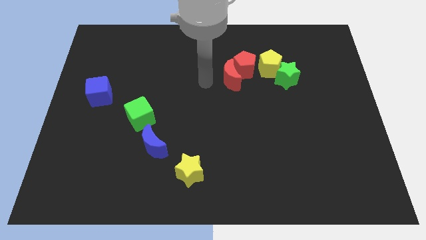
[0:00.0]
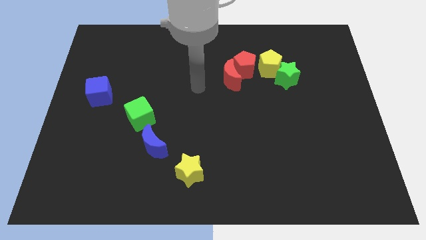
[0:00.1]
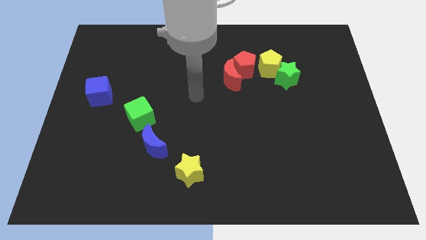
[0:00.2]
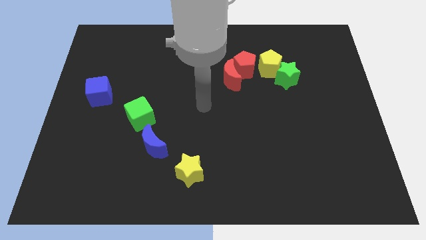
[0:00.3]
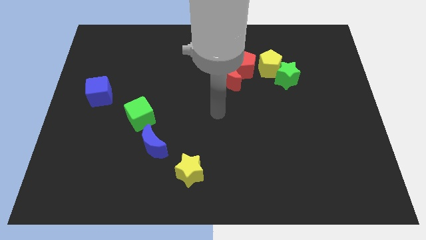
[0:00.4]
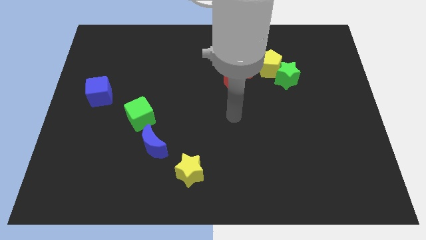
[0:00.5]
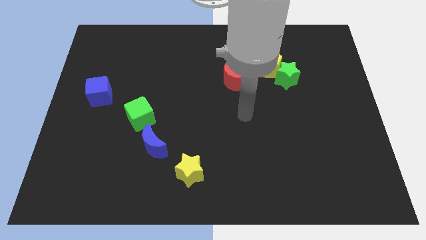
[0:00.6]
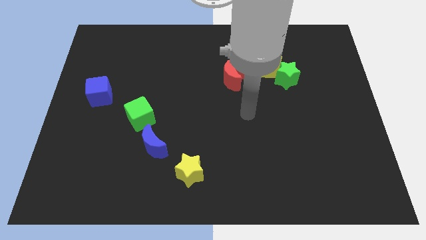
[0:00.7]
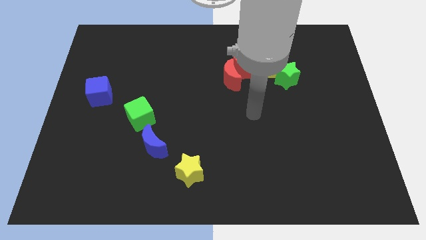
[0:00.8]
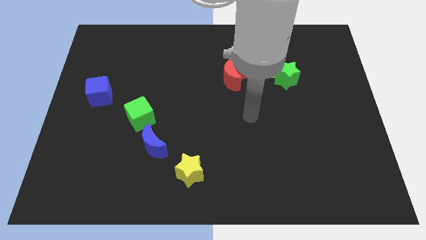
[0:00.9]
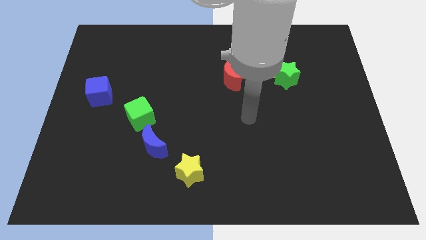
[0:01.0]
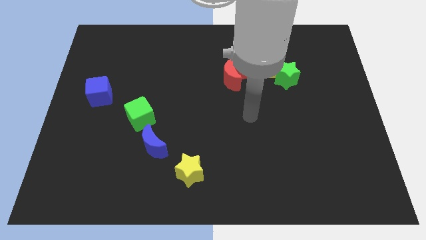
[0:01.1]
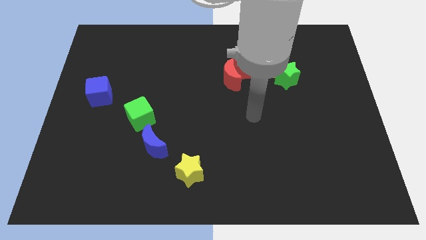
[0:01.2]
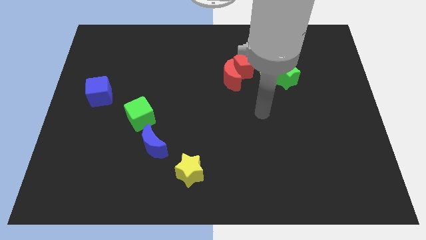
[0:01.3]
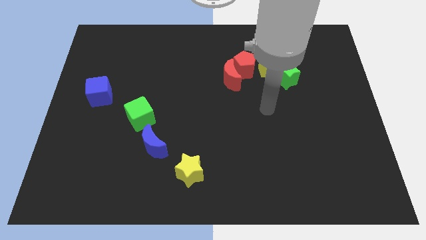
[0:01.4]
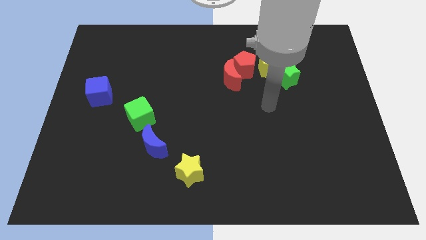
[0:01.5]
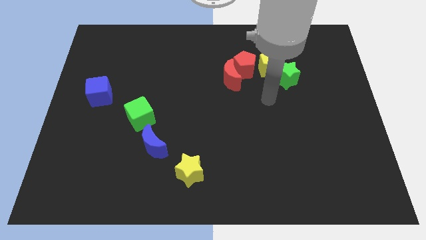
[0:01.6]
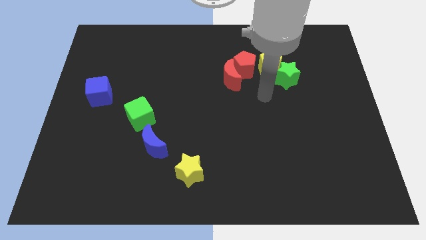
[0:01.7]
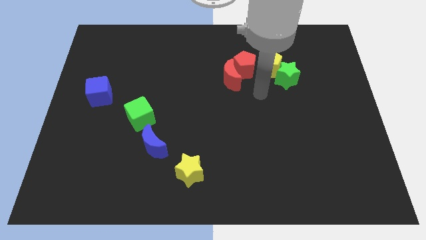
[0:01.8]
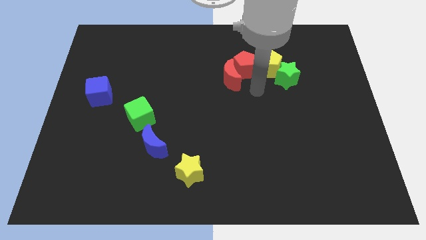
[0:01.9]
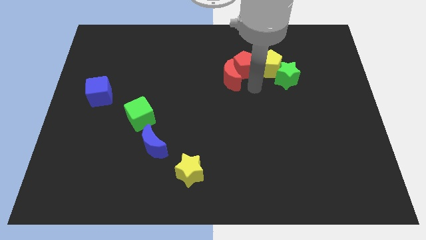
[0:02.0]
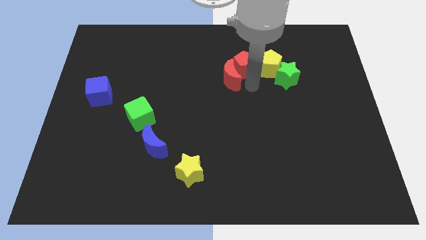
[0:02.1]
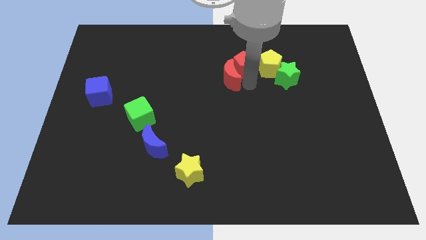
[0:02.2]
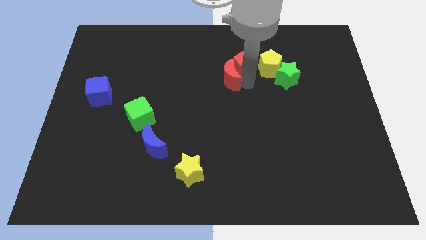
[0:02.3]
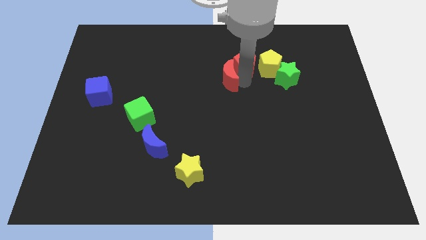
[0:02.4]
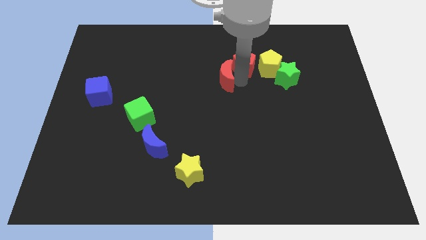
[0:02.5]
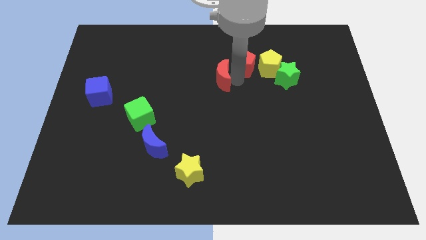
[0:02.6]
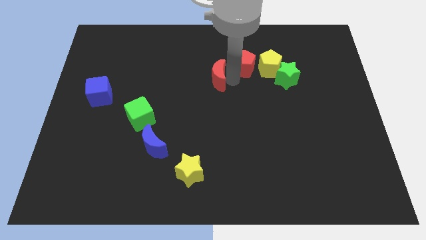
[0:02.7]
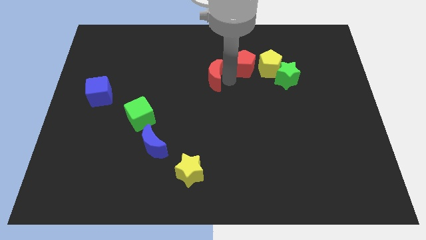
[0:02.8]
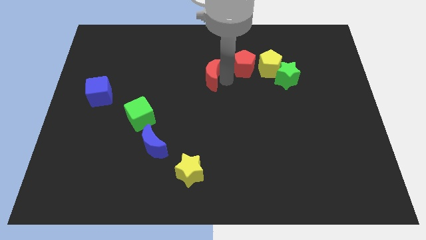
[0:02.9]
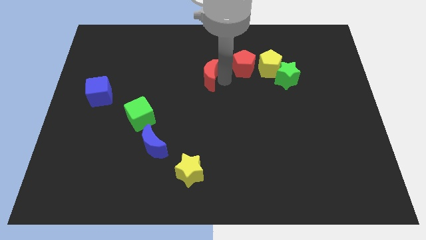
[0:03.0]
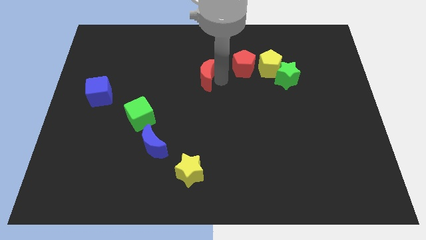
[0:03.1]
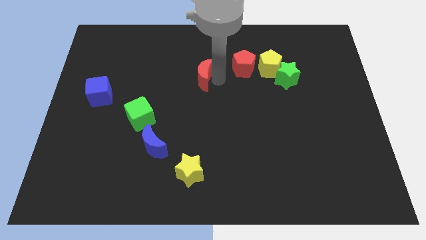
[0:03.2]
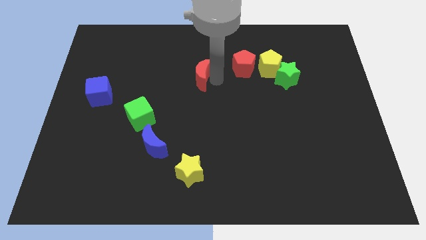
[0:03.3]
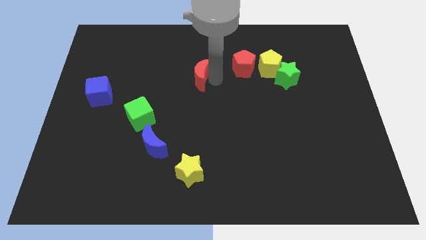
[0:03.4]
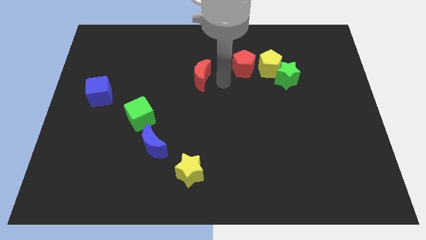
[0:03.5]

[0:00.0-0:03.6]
separate the red crescent from the red pentagon

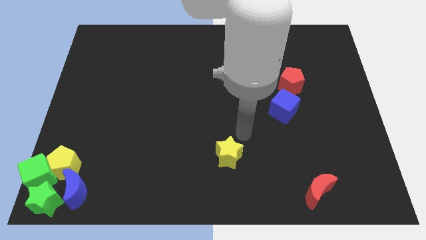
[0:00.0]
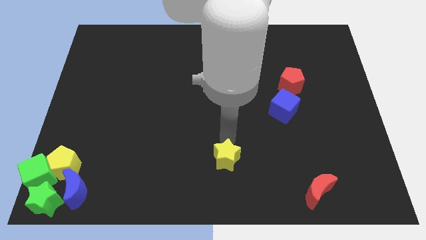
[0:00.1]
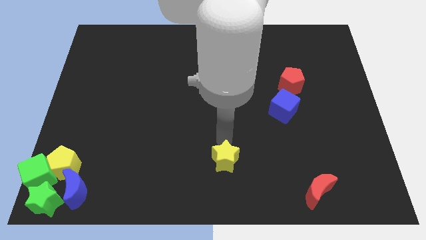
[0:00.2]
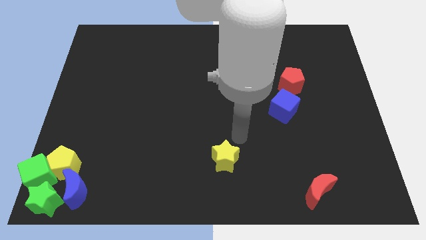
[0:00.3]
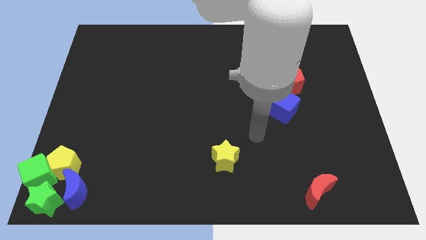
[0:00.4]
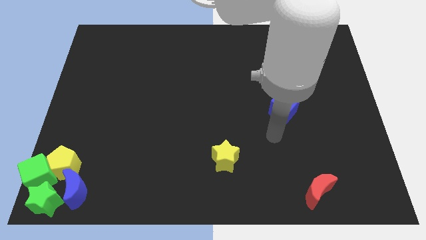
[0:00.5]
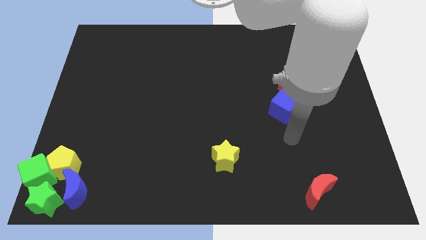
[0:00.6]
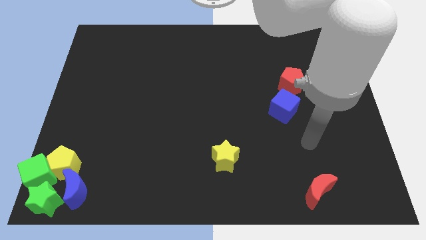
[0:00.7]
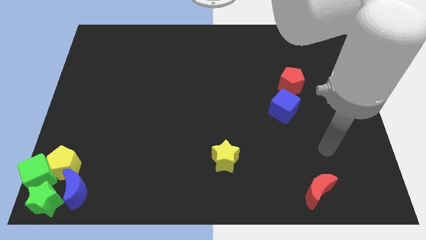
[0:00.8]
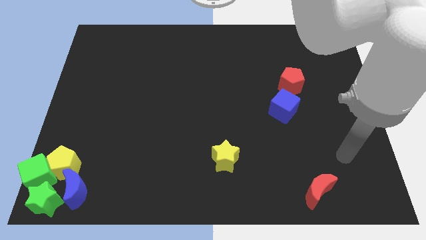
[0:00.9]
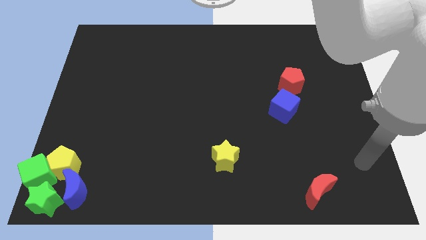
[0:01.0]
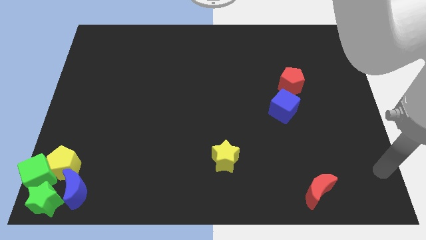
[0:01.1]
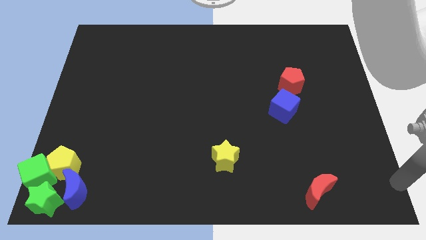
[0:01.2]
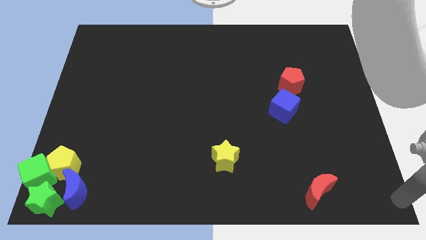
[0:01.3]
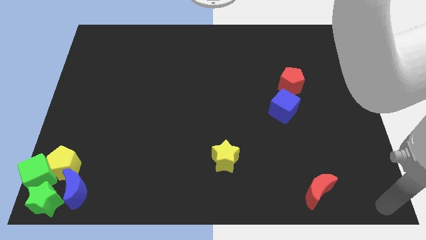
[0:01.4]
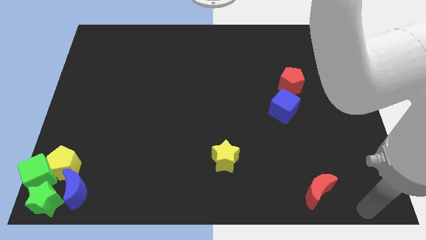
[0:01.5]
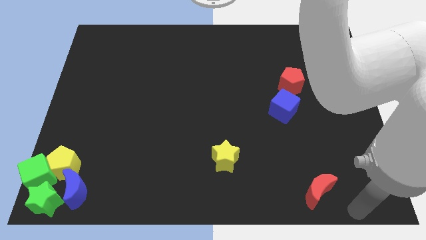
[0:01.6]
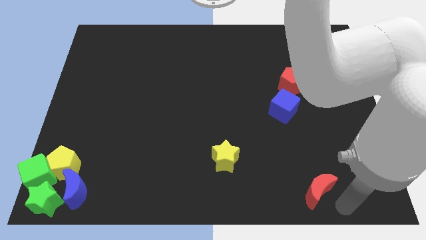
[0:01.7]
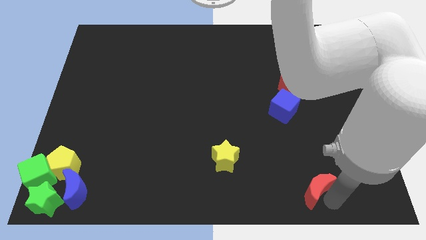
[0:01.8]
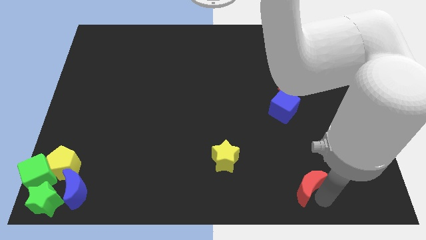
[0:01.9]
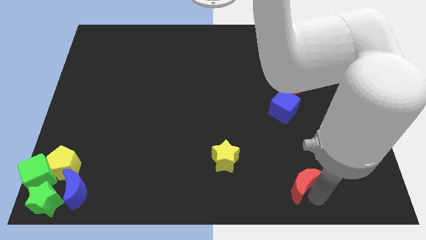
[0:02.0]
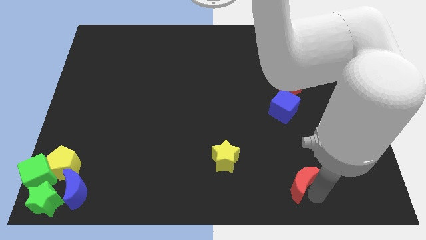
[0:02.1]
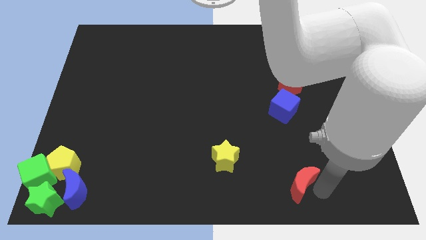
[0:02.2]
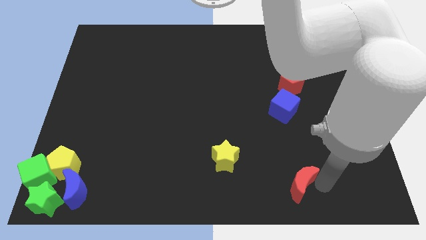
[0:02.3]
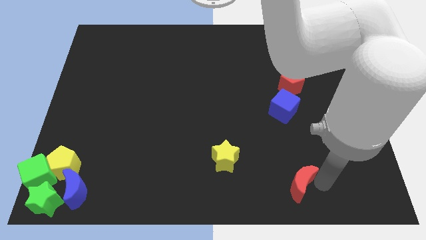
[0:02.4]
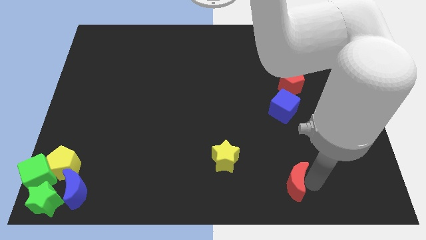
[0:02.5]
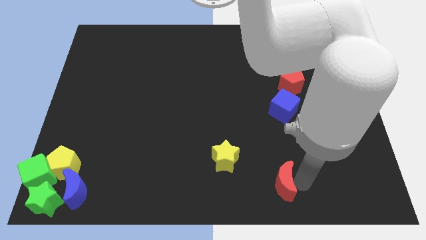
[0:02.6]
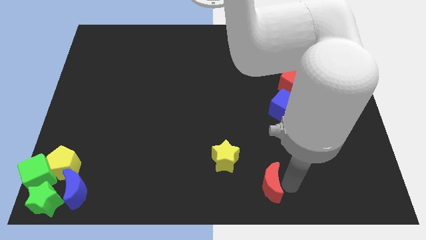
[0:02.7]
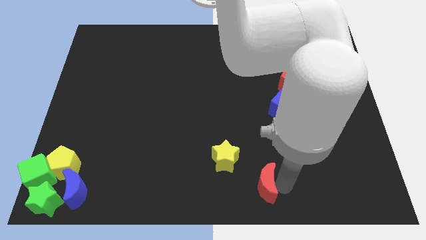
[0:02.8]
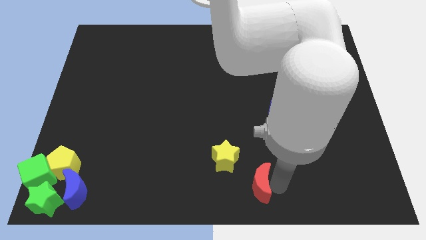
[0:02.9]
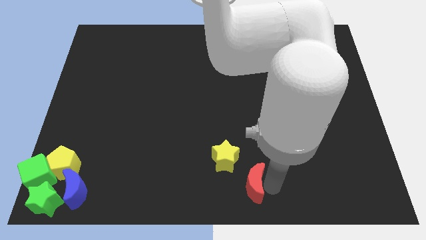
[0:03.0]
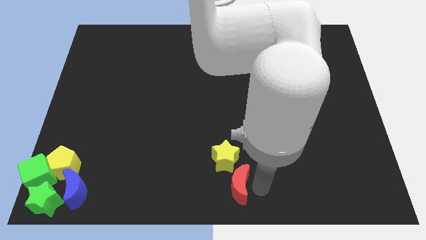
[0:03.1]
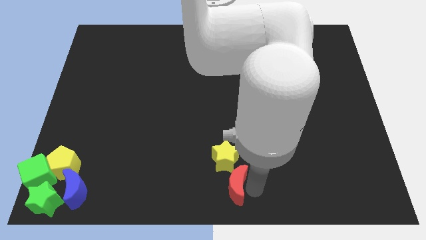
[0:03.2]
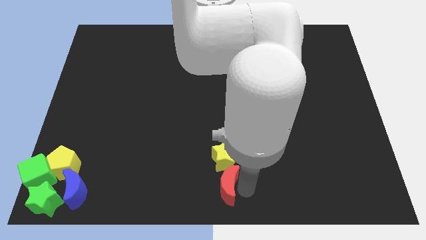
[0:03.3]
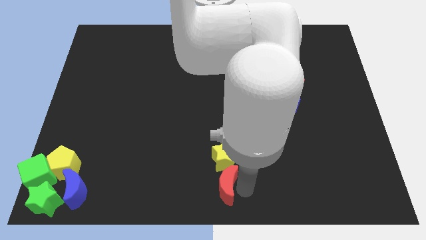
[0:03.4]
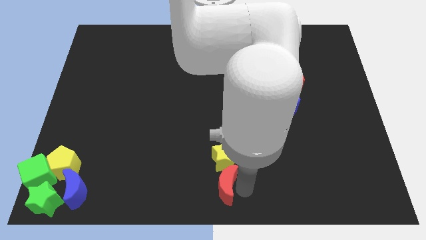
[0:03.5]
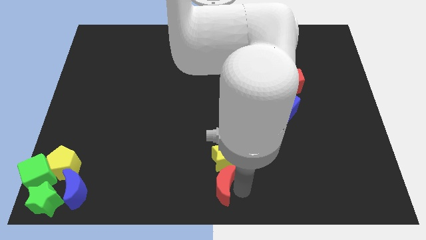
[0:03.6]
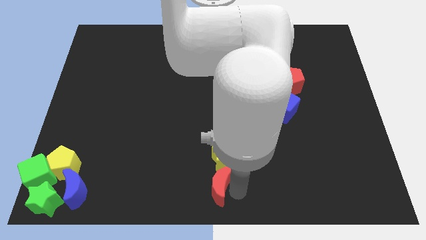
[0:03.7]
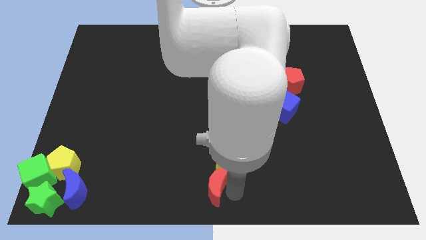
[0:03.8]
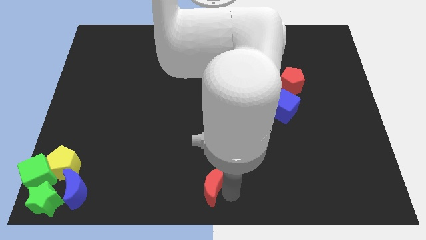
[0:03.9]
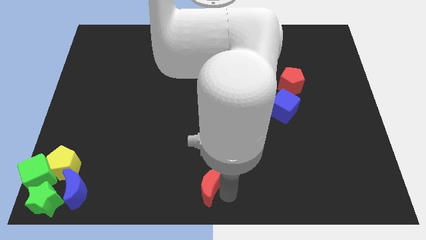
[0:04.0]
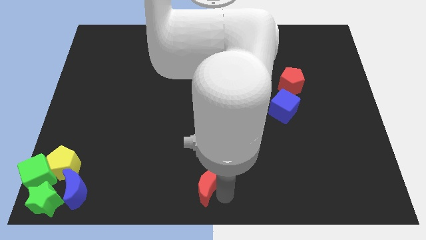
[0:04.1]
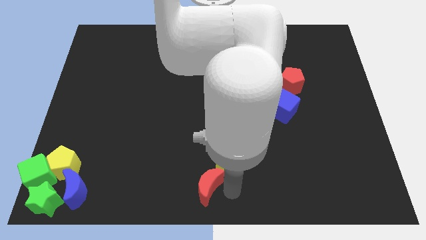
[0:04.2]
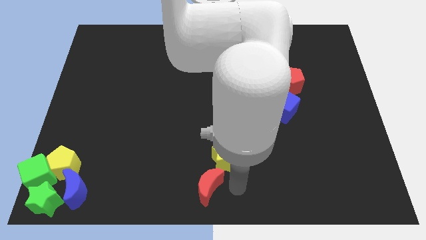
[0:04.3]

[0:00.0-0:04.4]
move the red crescent towards the down side of the yellow star

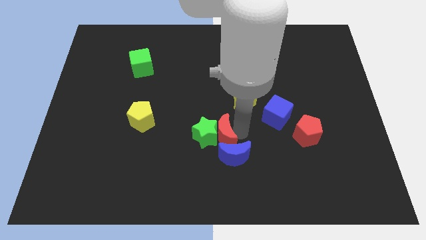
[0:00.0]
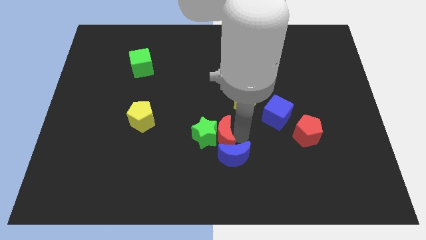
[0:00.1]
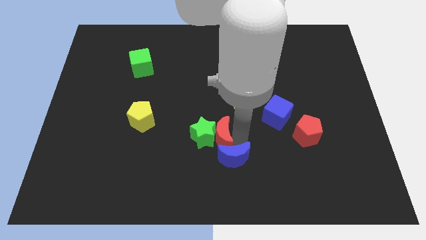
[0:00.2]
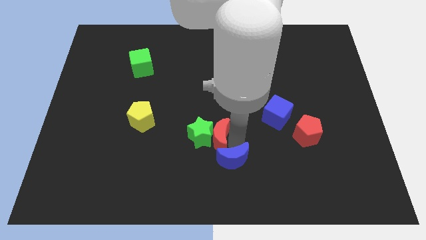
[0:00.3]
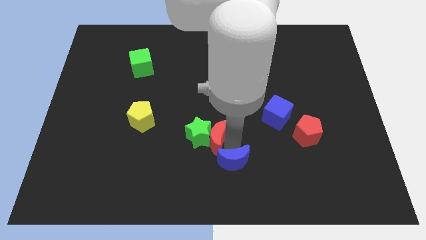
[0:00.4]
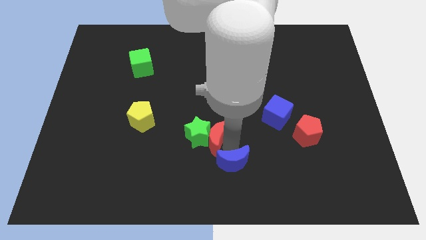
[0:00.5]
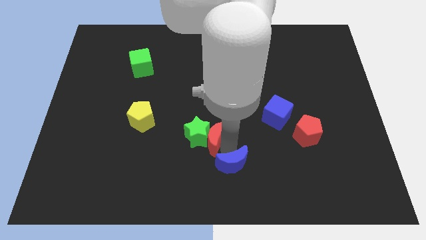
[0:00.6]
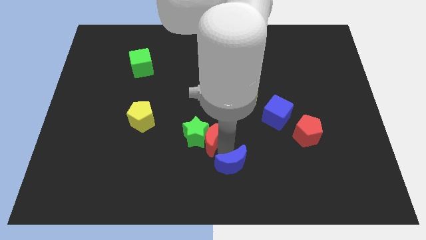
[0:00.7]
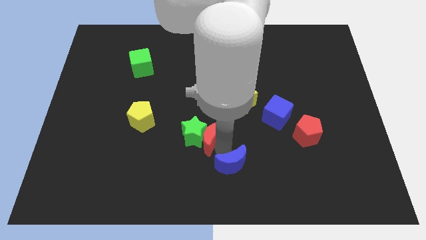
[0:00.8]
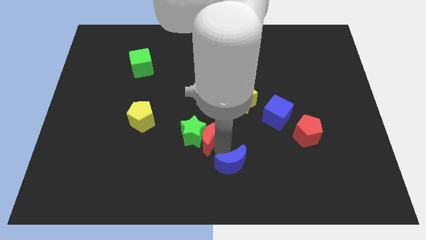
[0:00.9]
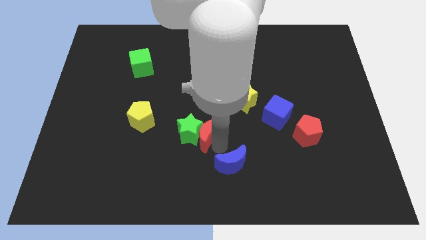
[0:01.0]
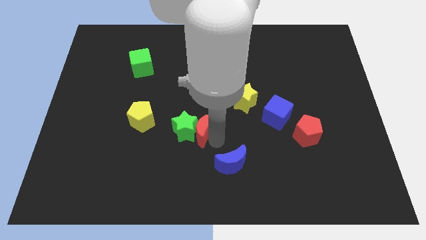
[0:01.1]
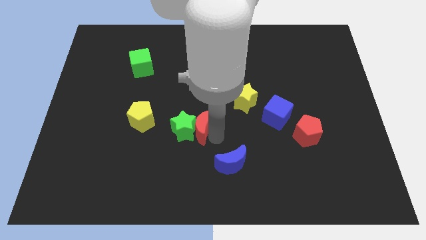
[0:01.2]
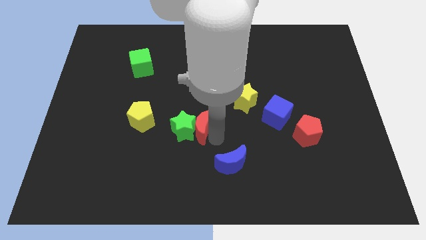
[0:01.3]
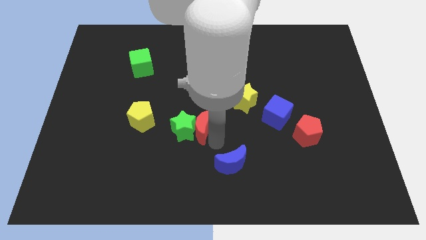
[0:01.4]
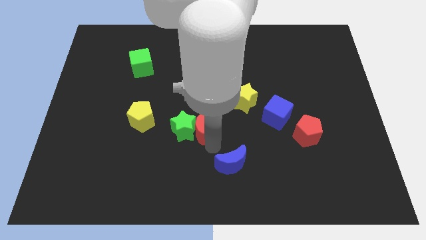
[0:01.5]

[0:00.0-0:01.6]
push the red crescent into the green star
